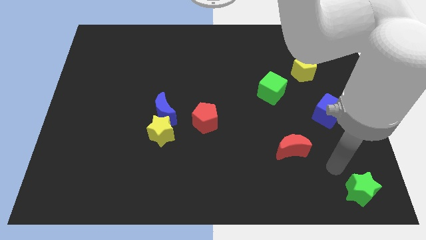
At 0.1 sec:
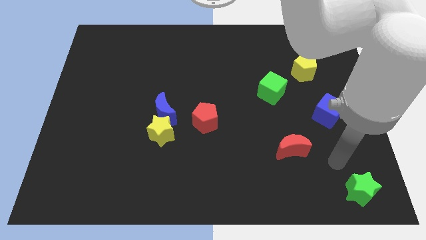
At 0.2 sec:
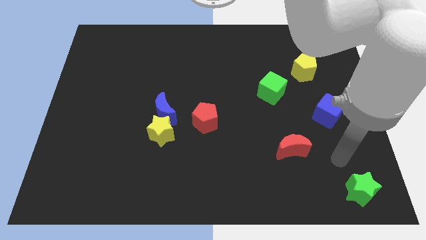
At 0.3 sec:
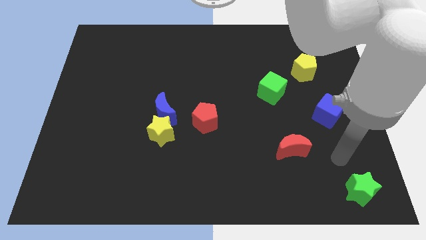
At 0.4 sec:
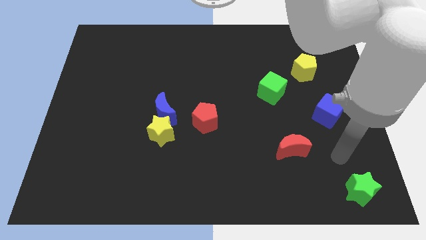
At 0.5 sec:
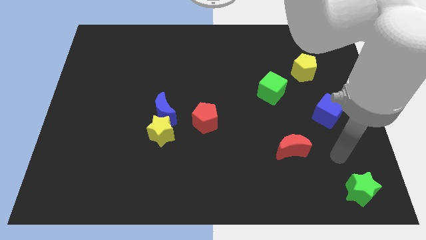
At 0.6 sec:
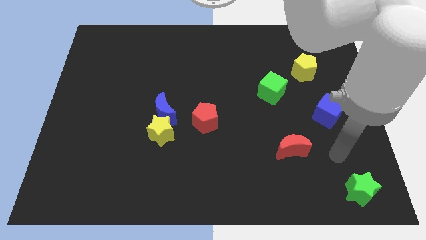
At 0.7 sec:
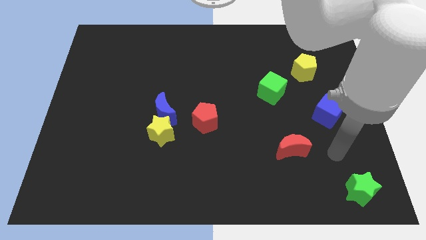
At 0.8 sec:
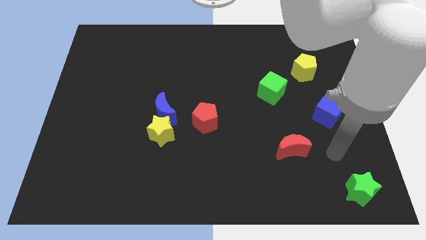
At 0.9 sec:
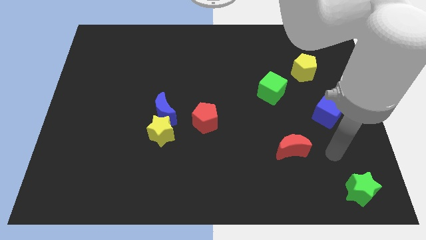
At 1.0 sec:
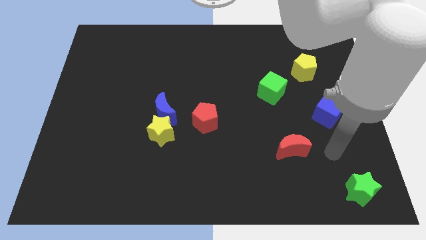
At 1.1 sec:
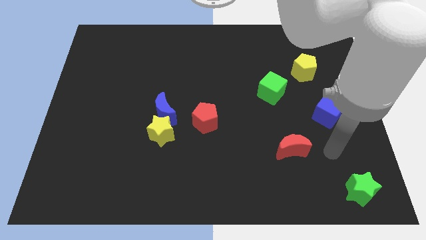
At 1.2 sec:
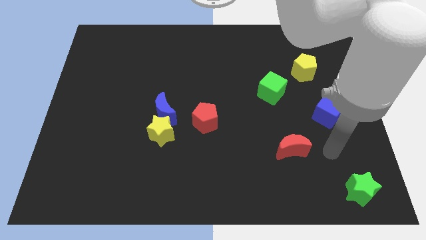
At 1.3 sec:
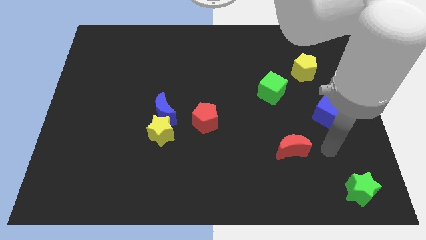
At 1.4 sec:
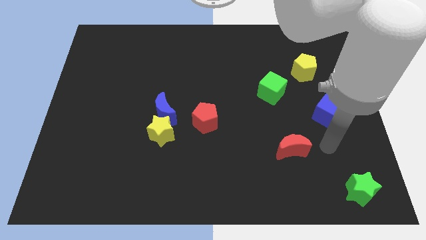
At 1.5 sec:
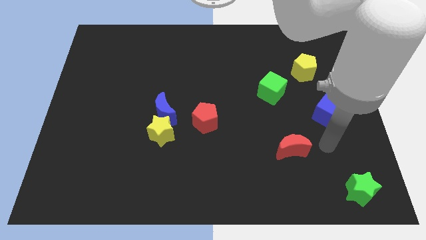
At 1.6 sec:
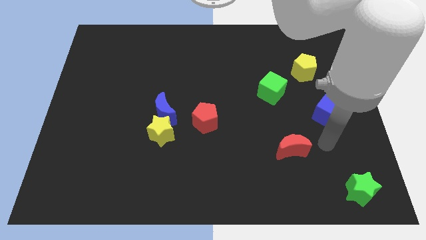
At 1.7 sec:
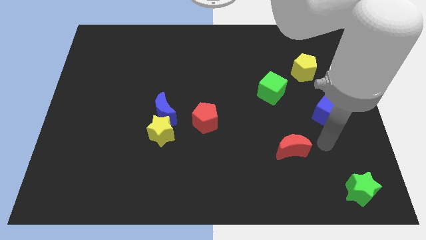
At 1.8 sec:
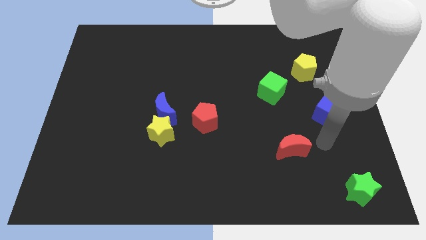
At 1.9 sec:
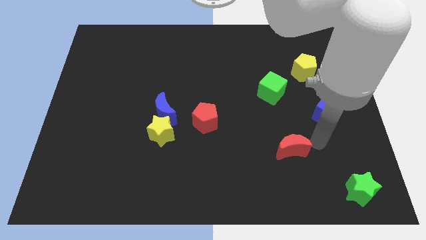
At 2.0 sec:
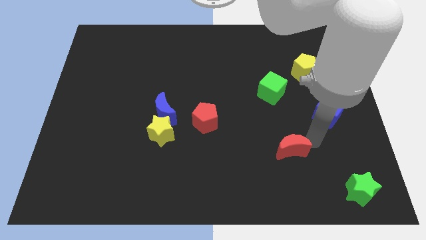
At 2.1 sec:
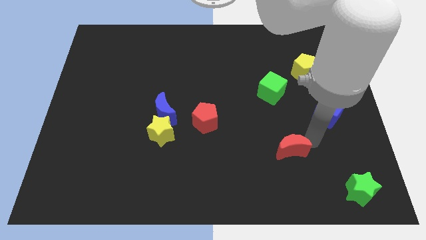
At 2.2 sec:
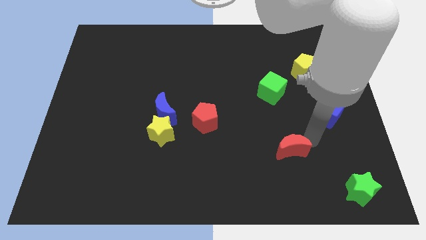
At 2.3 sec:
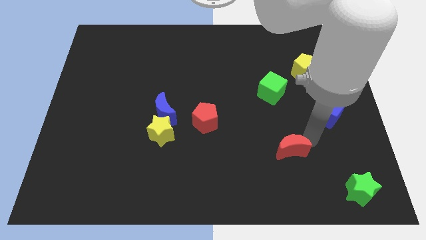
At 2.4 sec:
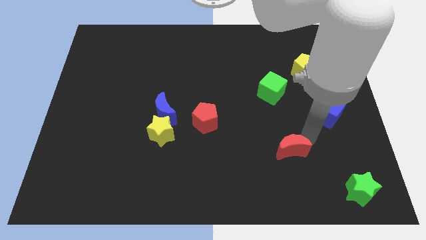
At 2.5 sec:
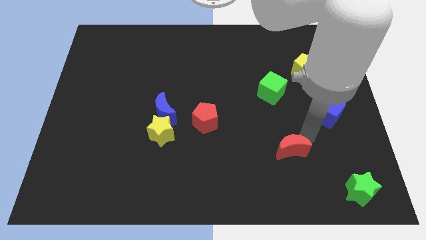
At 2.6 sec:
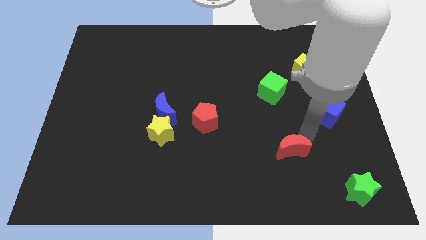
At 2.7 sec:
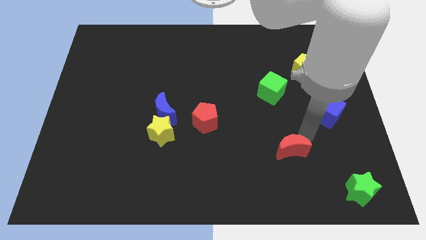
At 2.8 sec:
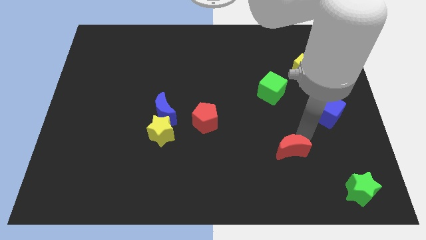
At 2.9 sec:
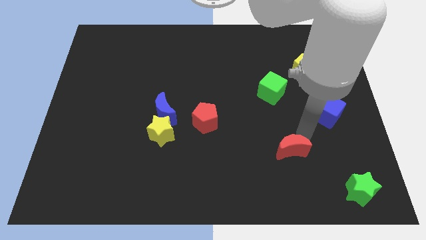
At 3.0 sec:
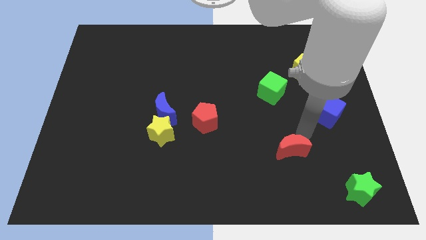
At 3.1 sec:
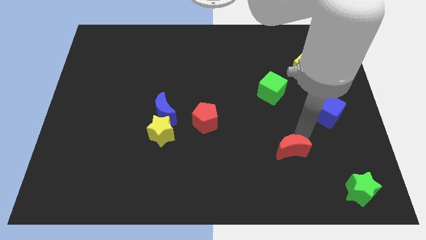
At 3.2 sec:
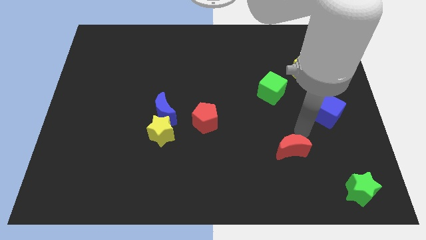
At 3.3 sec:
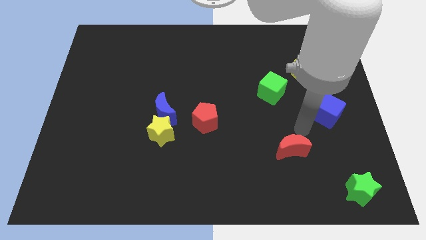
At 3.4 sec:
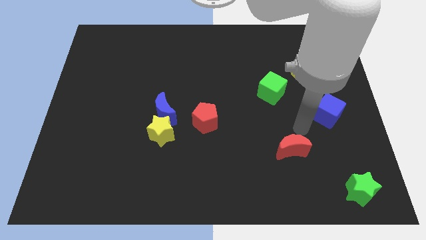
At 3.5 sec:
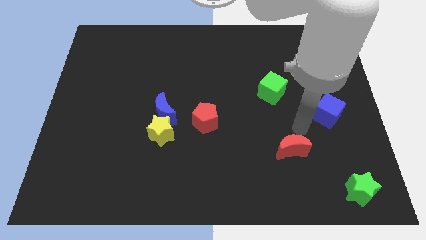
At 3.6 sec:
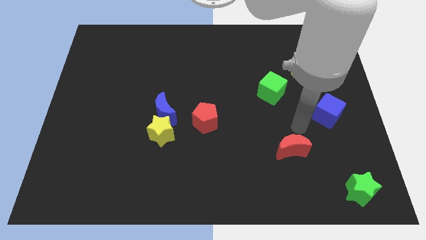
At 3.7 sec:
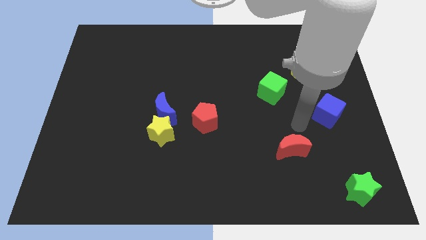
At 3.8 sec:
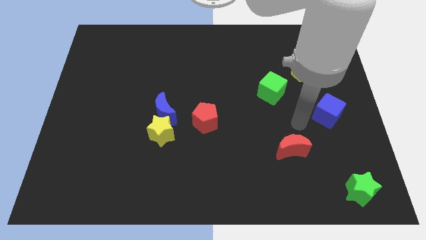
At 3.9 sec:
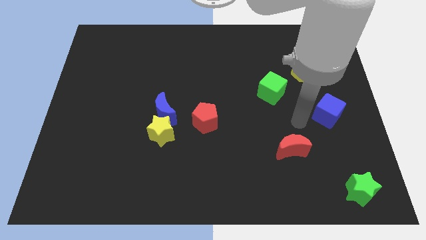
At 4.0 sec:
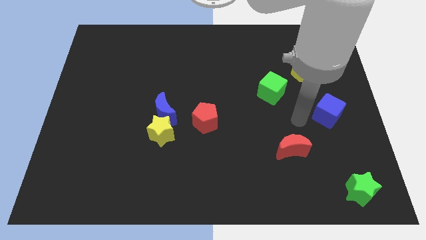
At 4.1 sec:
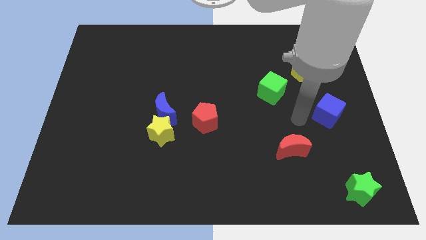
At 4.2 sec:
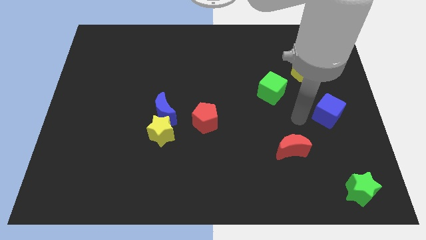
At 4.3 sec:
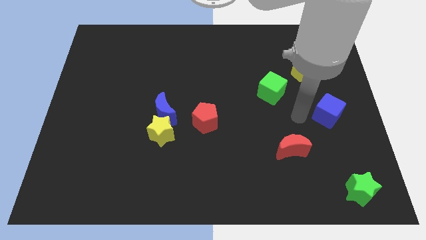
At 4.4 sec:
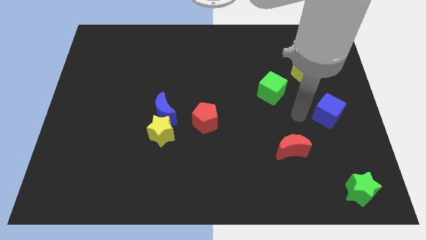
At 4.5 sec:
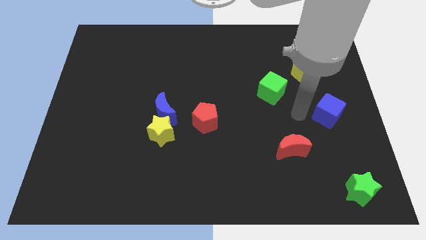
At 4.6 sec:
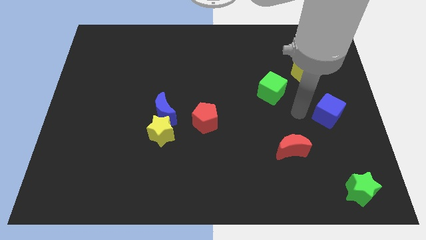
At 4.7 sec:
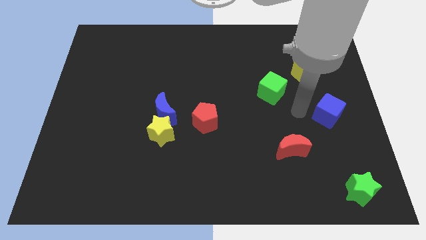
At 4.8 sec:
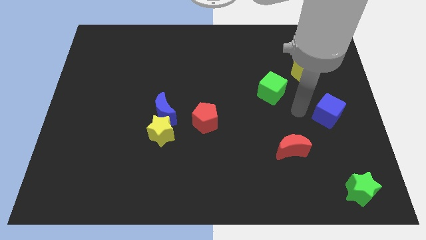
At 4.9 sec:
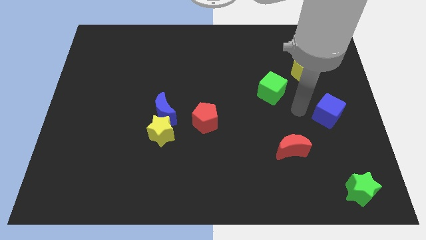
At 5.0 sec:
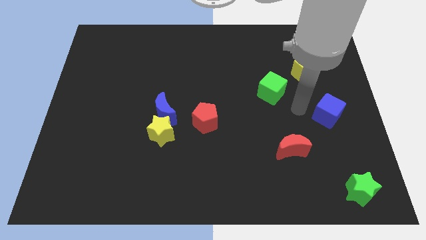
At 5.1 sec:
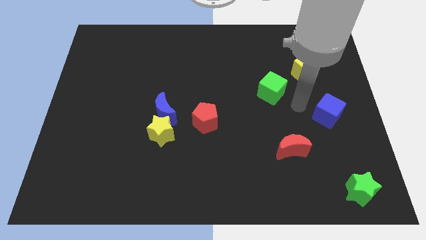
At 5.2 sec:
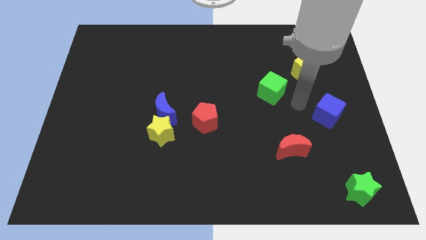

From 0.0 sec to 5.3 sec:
go and place your hand in between the green and blue cubes

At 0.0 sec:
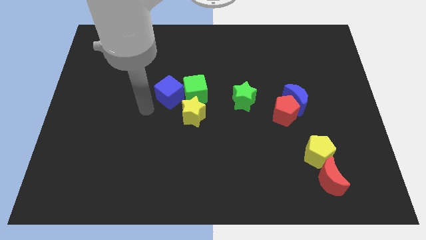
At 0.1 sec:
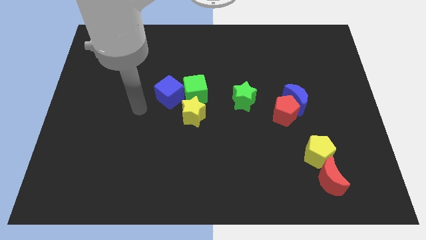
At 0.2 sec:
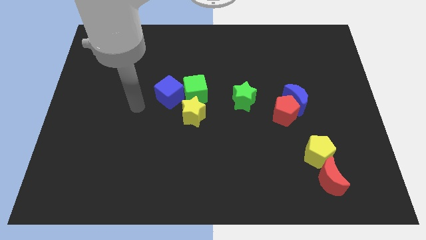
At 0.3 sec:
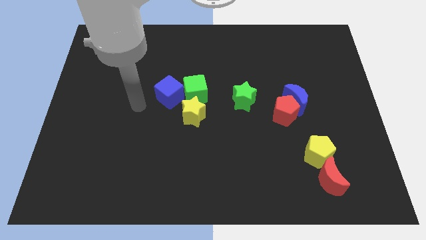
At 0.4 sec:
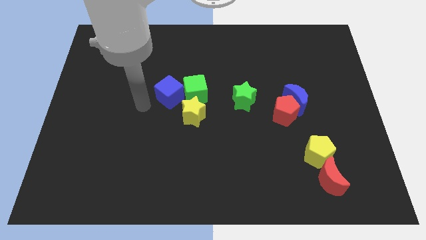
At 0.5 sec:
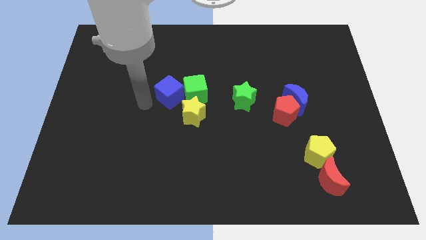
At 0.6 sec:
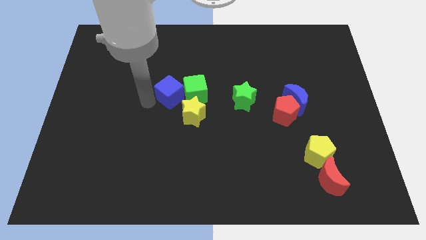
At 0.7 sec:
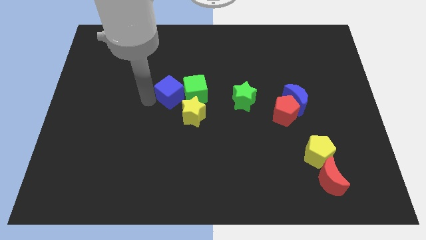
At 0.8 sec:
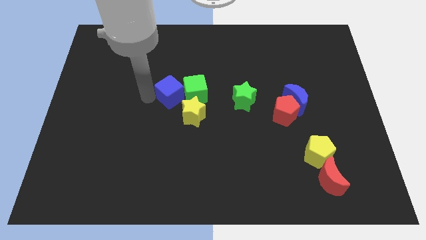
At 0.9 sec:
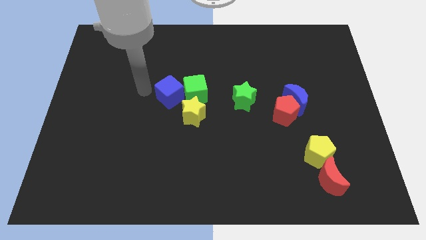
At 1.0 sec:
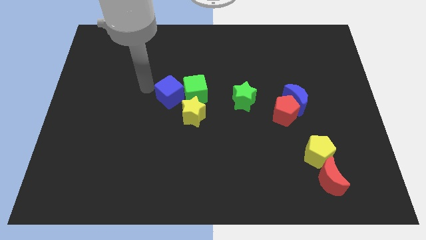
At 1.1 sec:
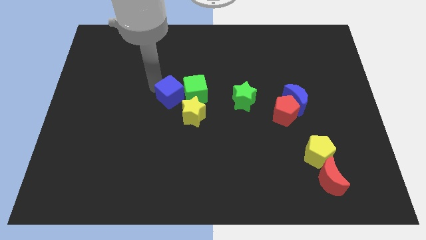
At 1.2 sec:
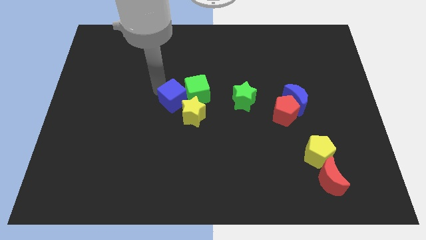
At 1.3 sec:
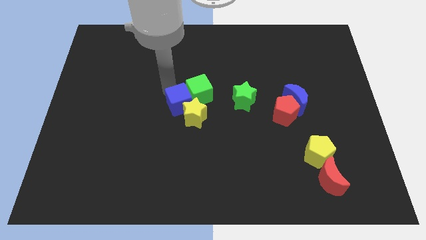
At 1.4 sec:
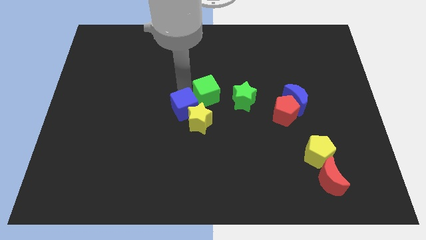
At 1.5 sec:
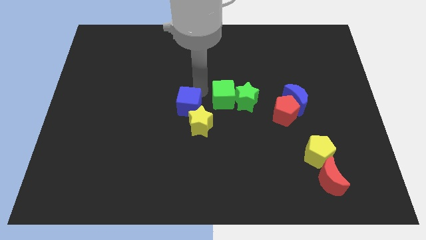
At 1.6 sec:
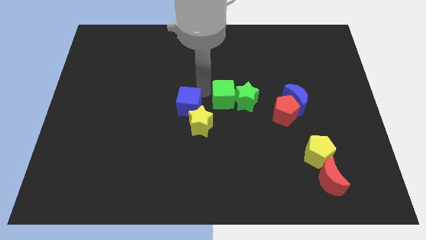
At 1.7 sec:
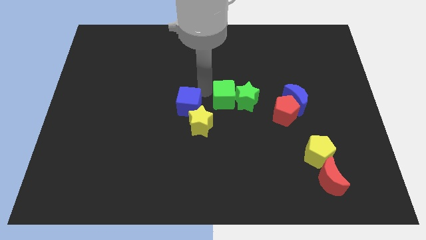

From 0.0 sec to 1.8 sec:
place your arm in between the blue cube and green cube

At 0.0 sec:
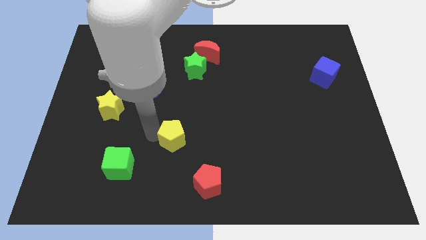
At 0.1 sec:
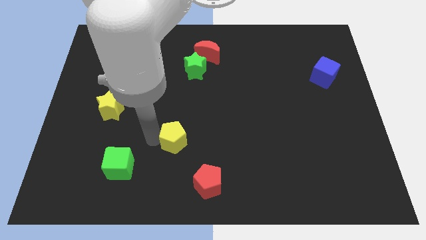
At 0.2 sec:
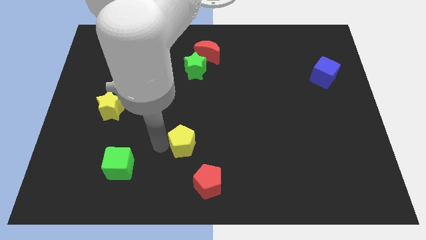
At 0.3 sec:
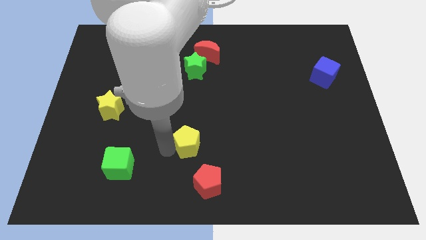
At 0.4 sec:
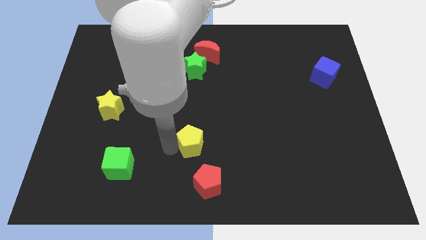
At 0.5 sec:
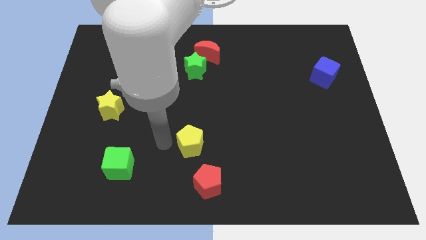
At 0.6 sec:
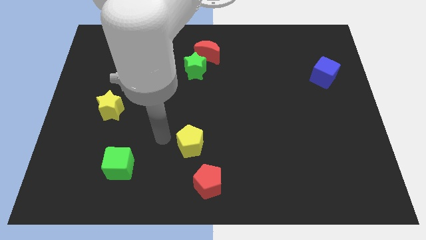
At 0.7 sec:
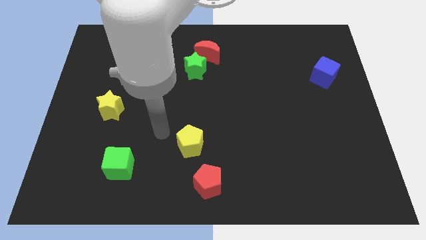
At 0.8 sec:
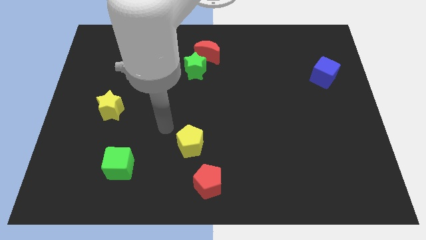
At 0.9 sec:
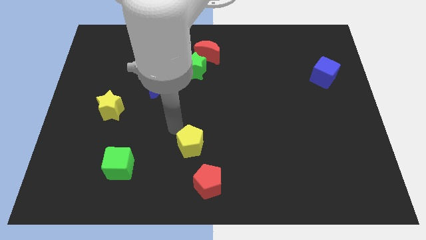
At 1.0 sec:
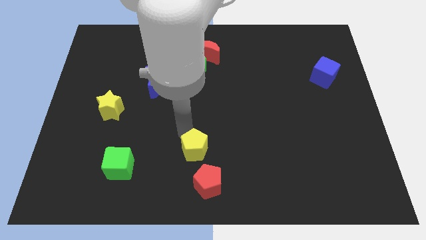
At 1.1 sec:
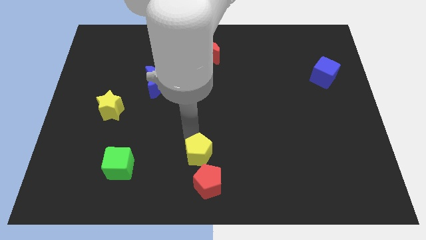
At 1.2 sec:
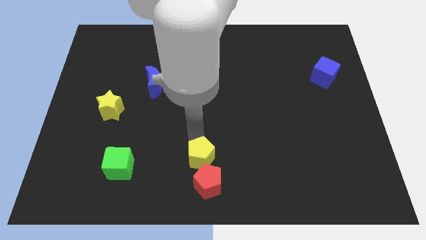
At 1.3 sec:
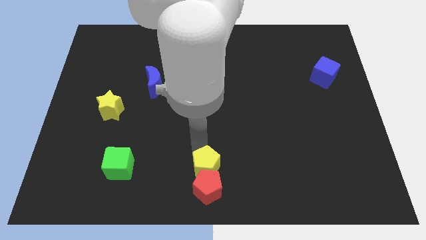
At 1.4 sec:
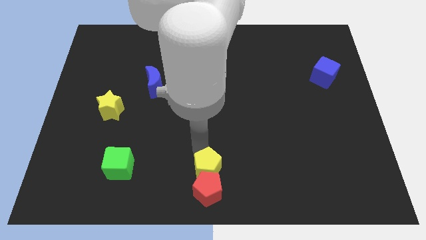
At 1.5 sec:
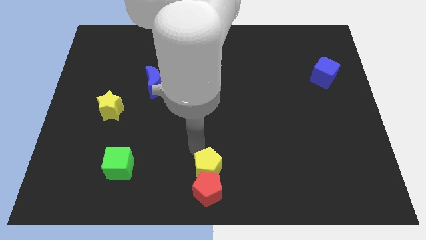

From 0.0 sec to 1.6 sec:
put the yellow pentagon into the red pentagon

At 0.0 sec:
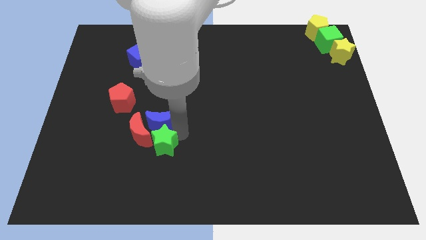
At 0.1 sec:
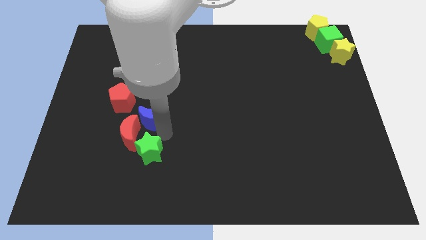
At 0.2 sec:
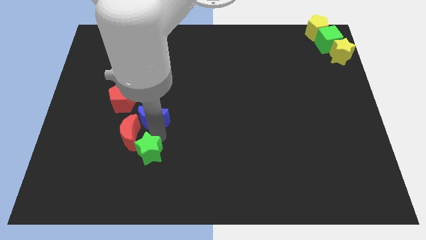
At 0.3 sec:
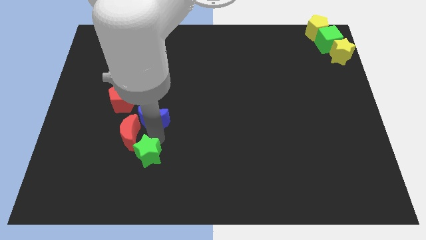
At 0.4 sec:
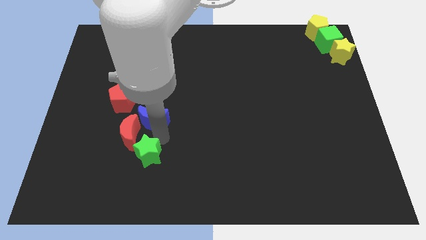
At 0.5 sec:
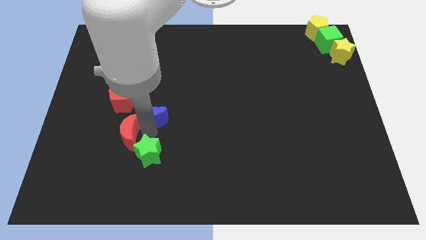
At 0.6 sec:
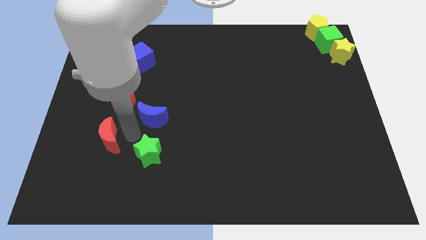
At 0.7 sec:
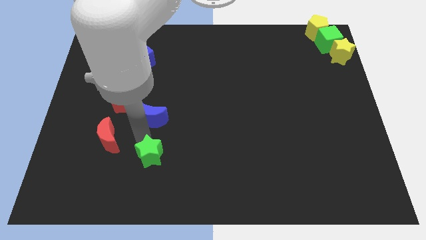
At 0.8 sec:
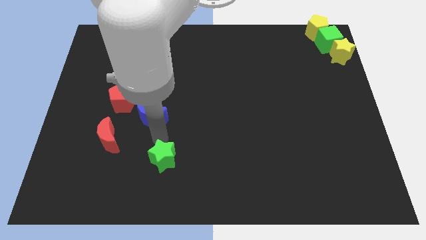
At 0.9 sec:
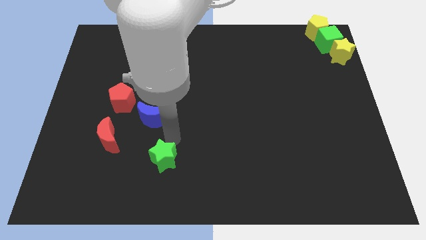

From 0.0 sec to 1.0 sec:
separate the red moon and green star
